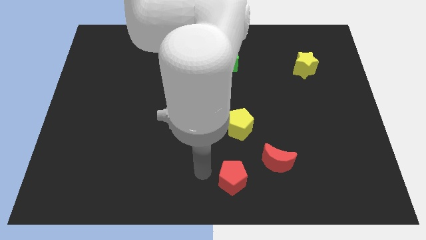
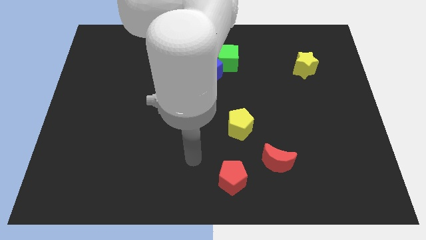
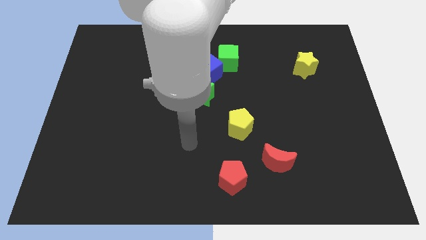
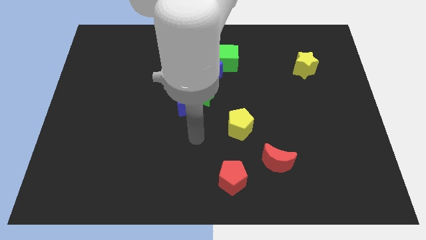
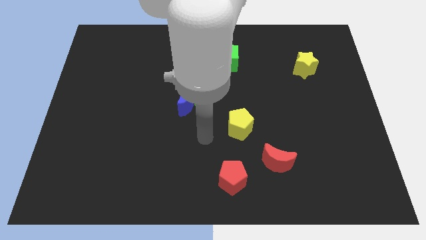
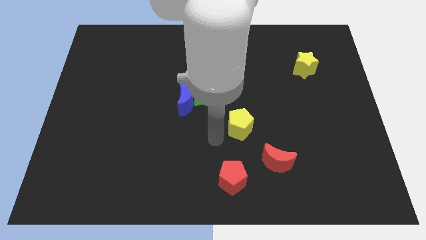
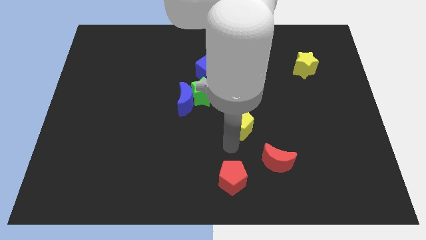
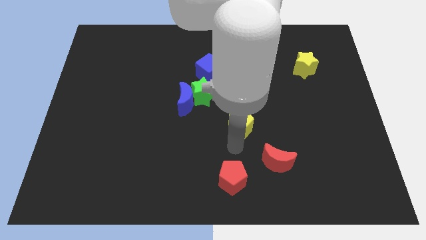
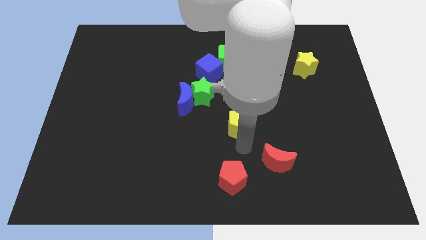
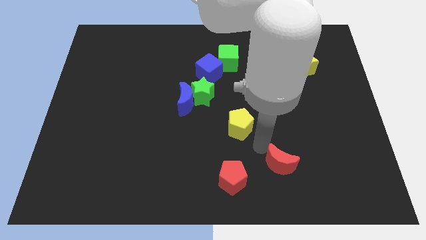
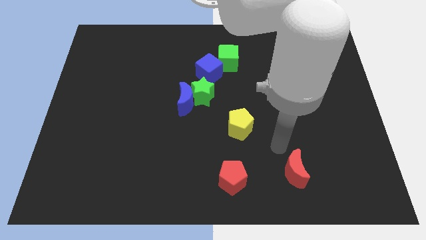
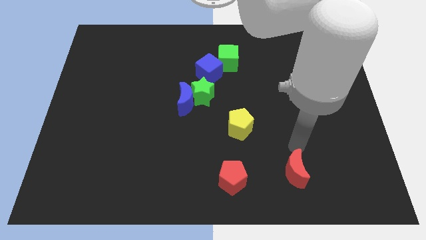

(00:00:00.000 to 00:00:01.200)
place your hand at the top of the red crescent

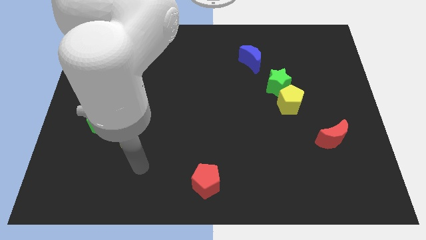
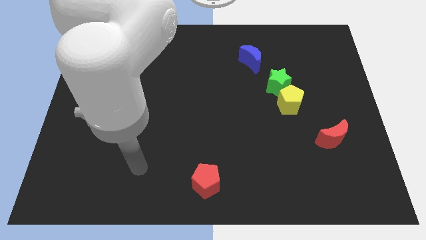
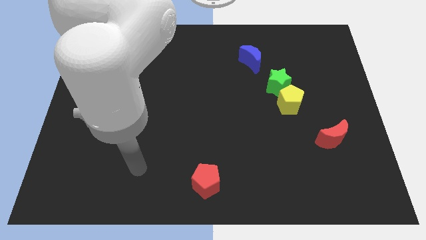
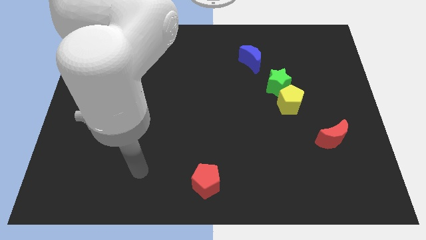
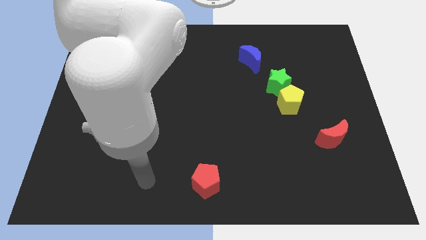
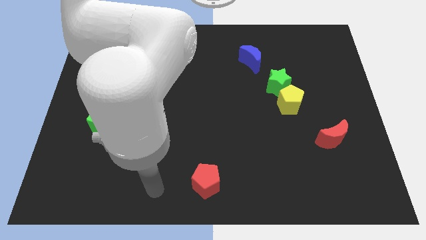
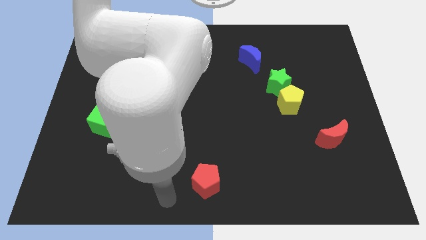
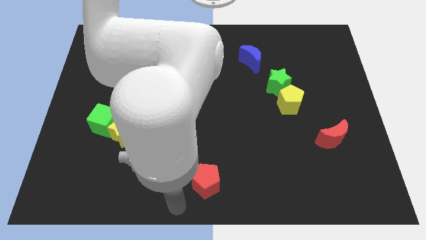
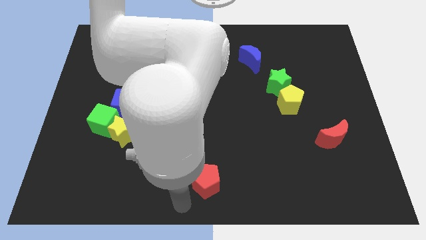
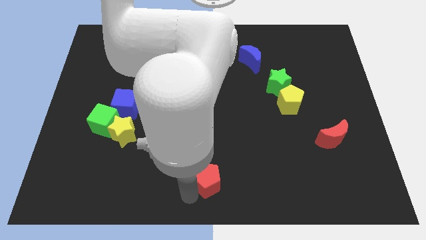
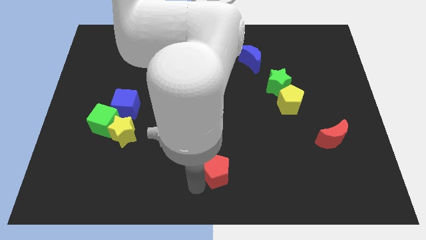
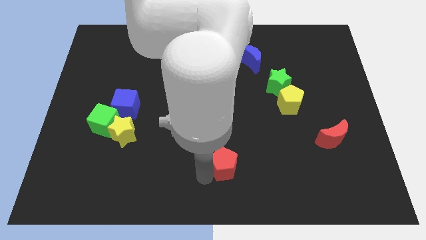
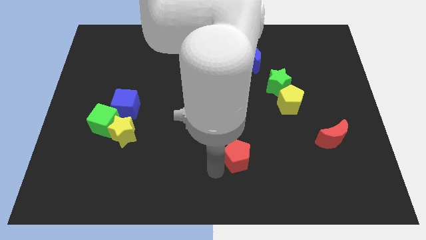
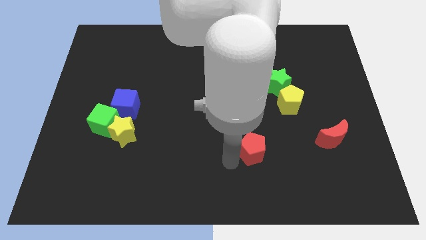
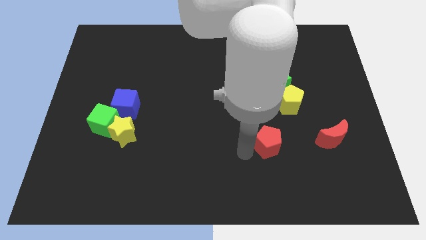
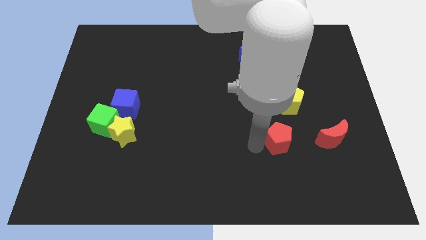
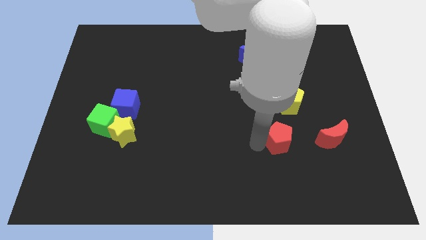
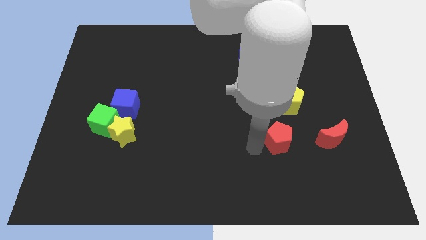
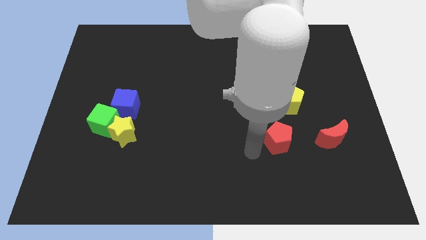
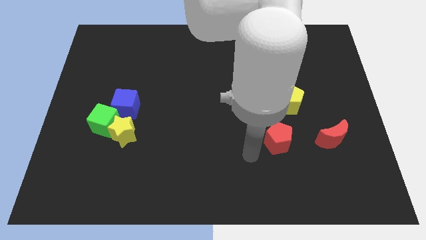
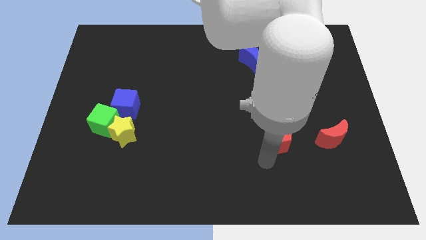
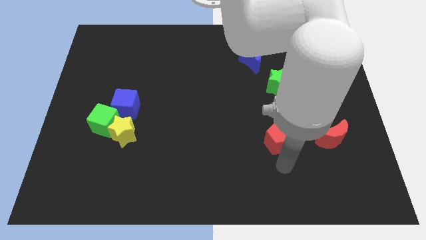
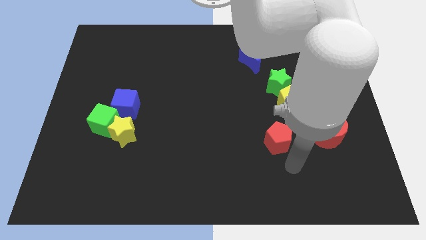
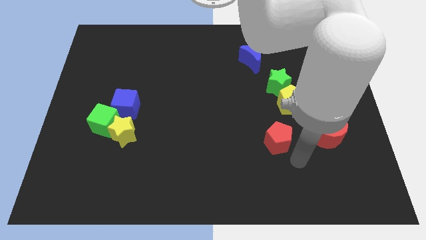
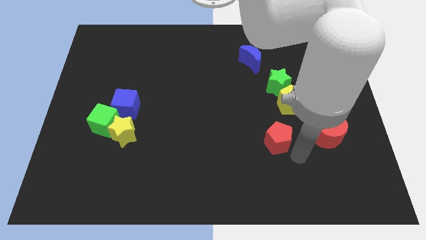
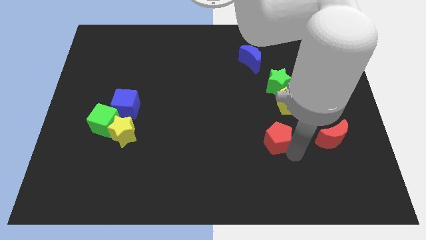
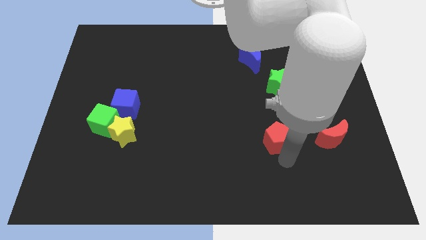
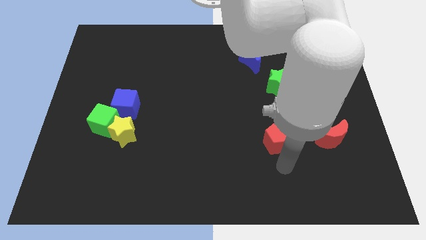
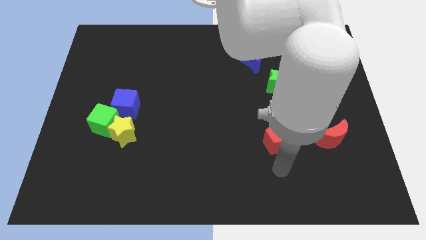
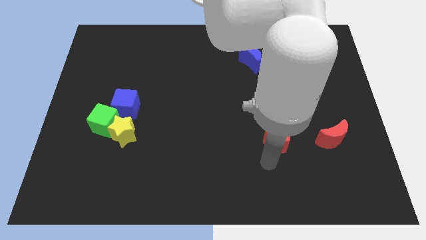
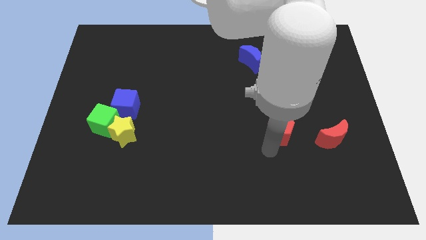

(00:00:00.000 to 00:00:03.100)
place the red pentagon to the left of red moon

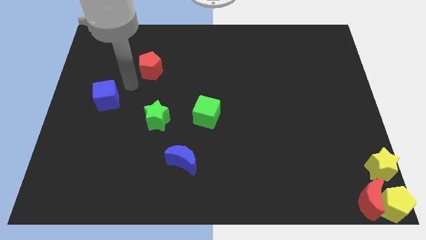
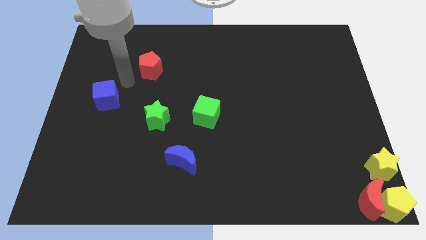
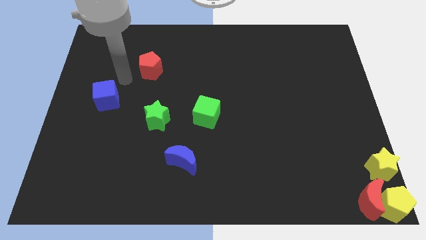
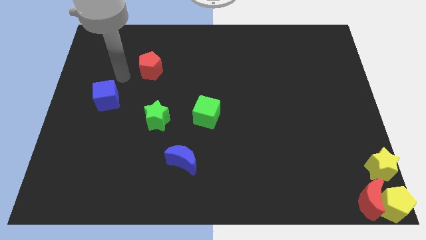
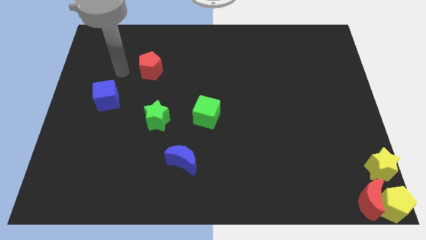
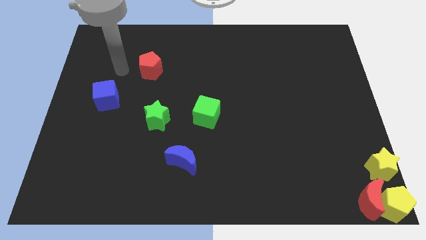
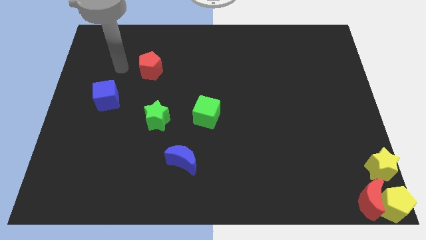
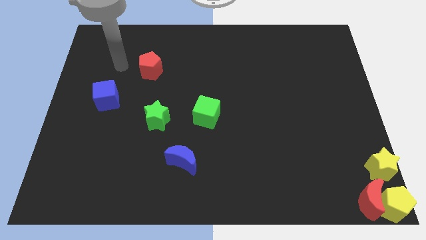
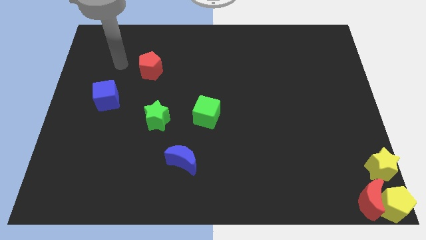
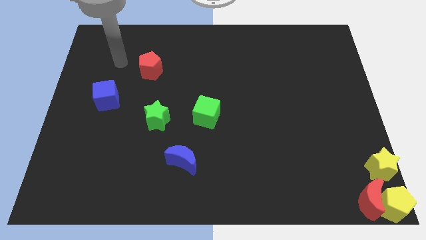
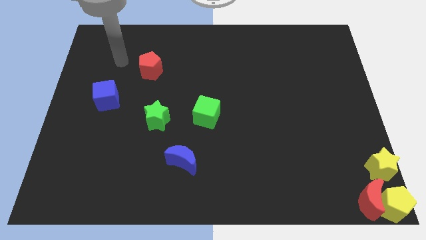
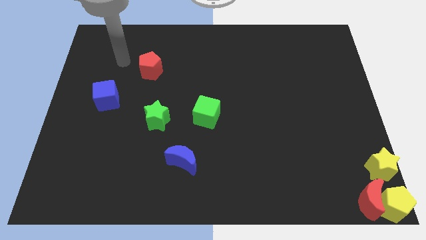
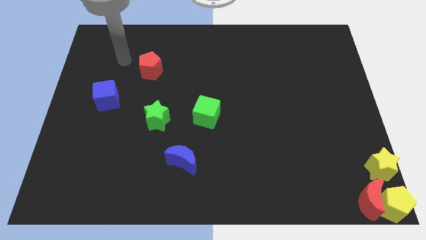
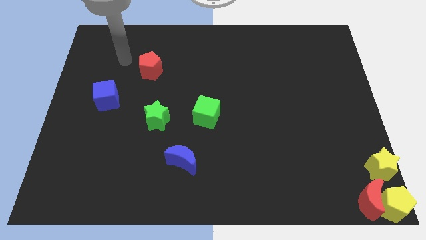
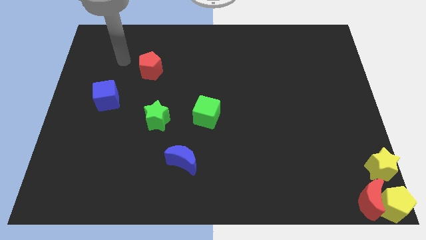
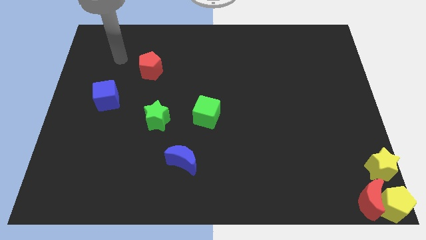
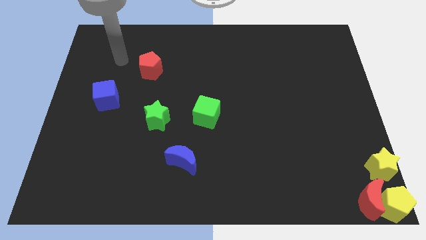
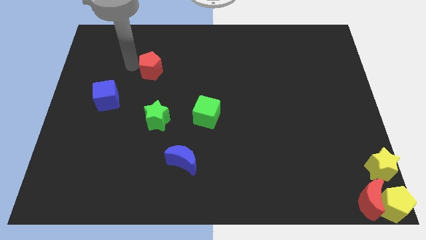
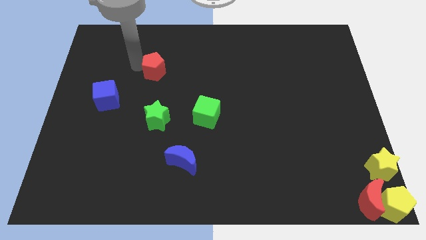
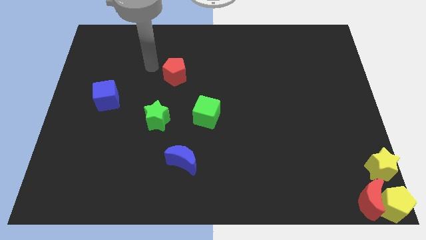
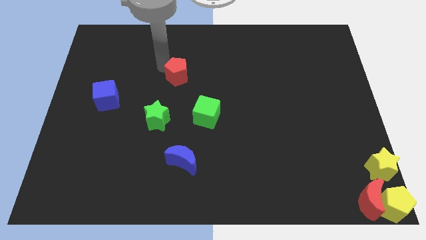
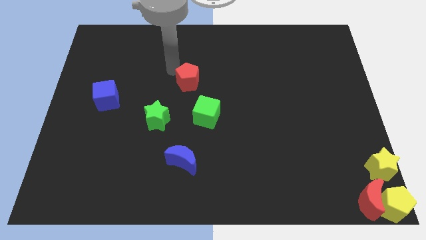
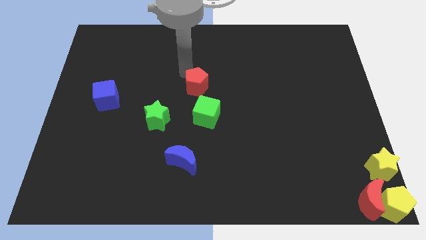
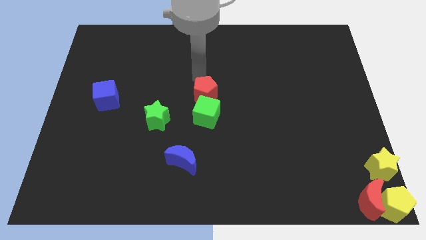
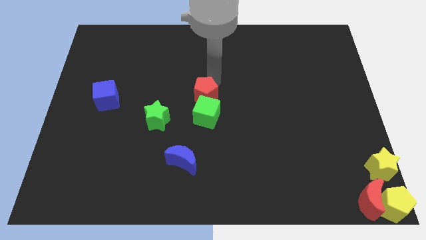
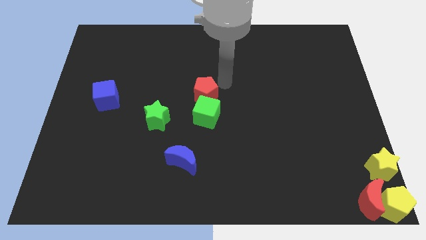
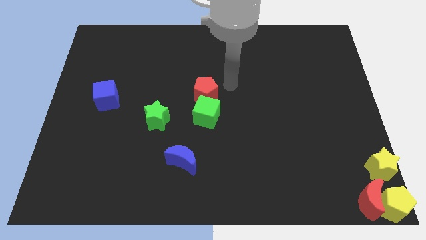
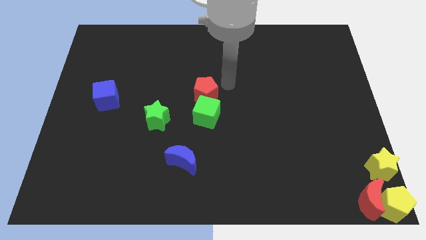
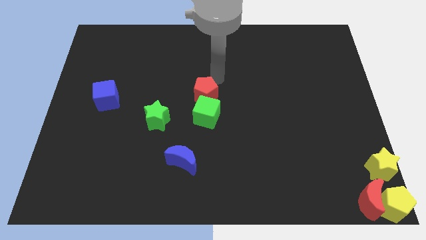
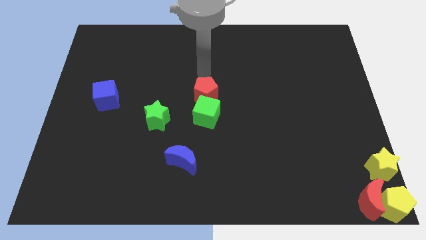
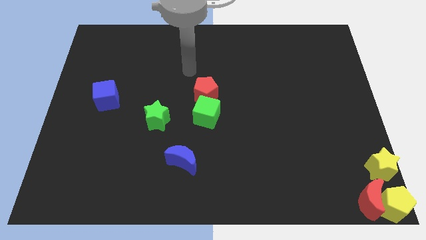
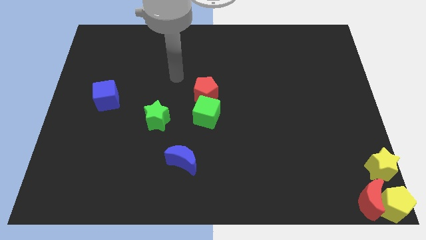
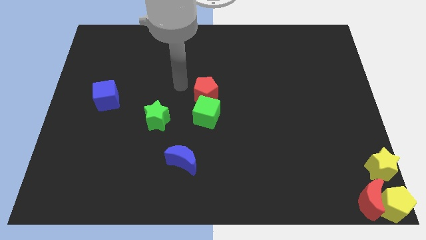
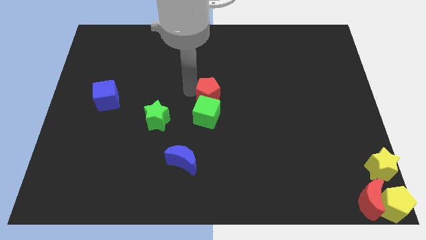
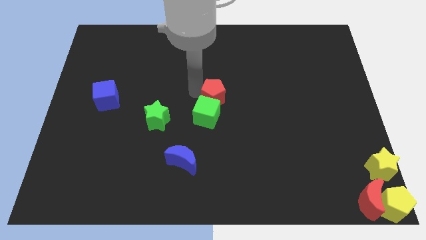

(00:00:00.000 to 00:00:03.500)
push the red pentagon to the top of the green cube

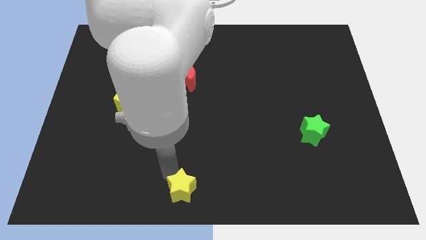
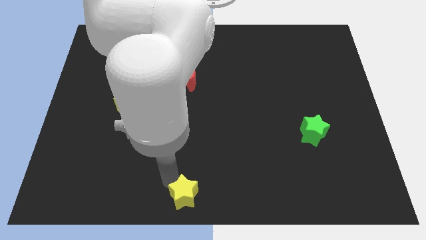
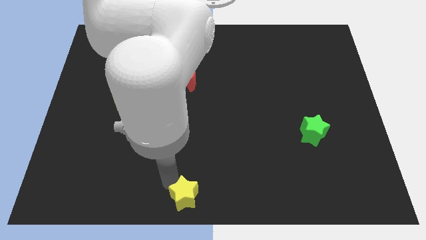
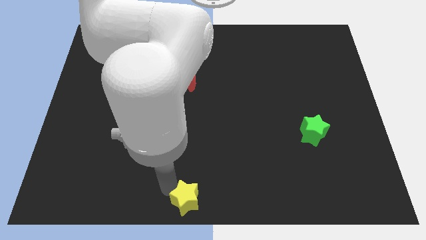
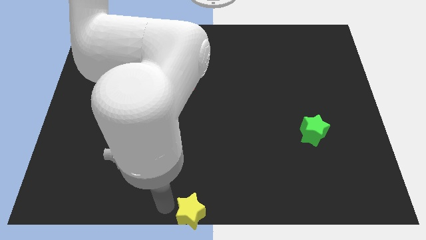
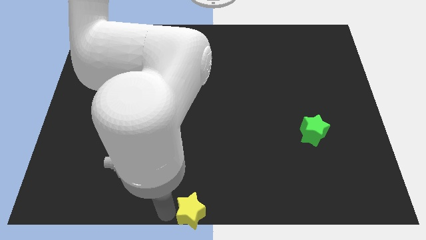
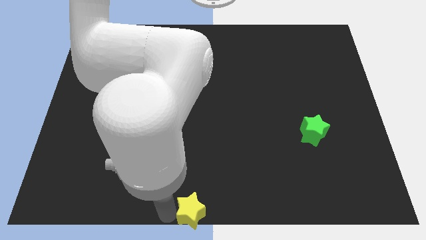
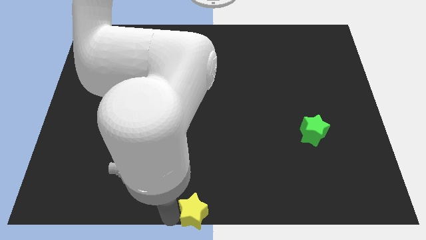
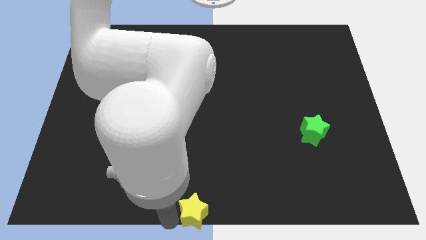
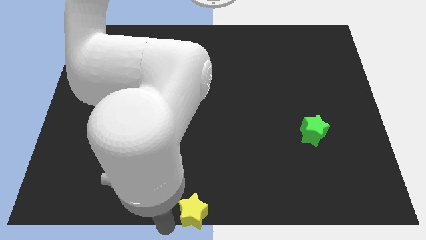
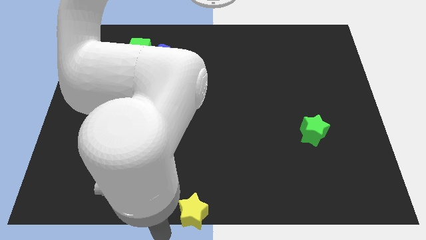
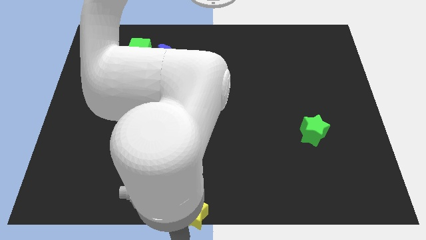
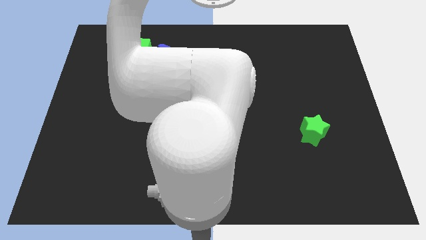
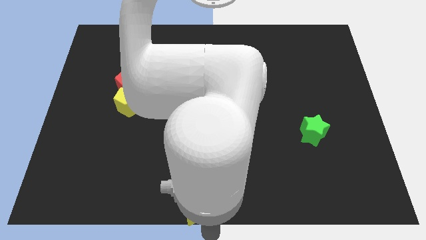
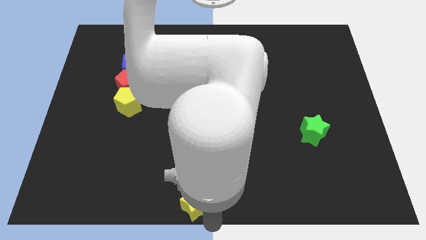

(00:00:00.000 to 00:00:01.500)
push slightly the yellow star towards down
